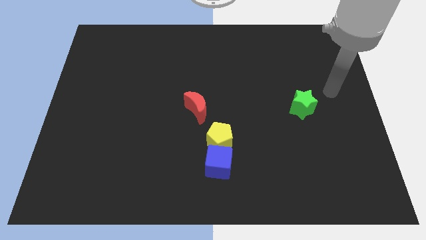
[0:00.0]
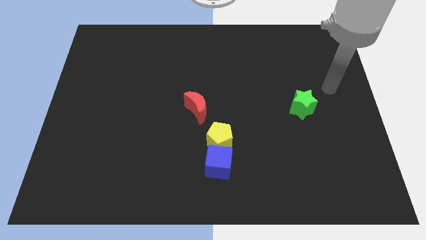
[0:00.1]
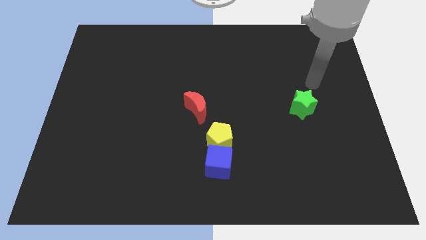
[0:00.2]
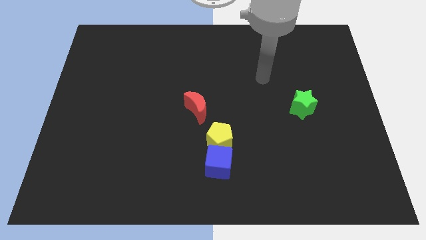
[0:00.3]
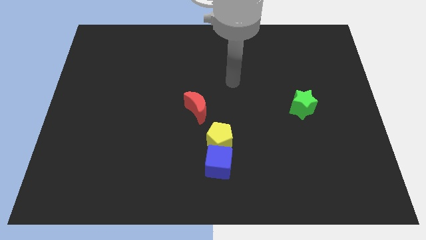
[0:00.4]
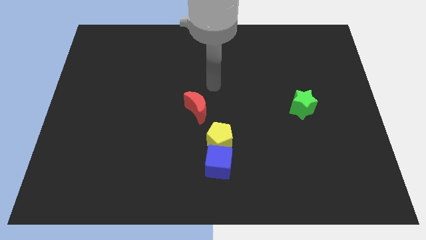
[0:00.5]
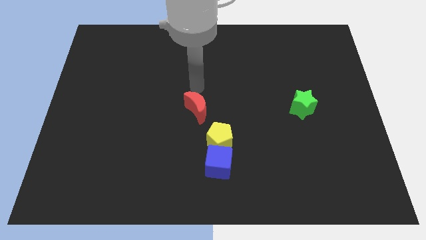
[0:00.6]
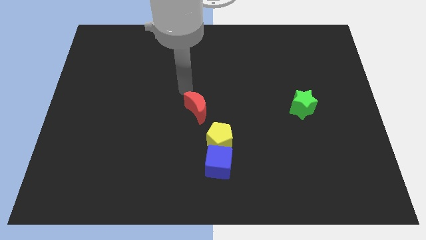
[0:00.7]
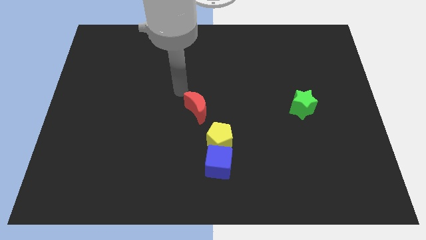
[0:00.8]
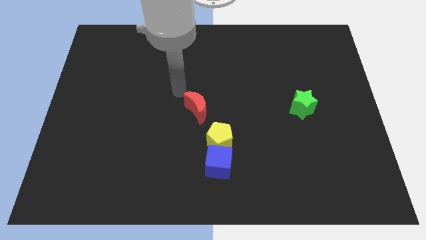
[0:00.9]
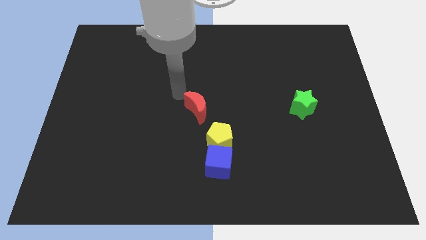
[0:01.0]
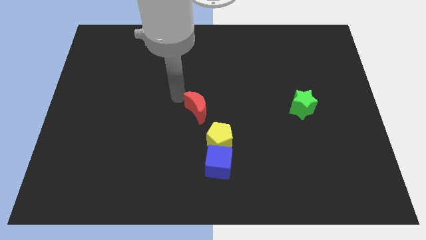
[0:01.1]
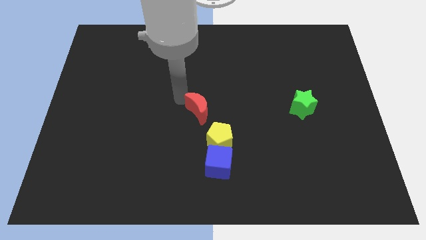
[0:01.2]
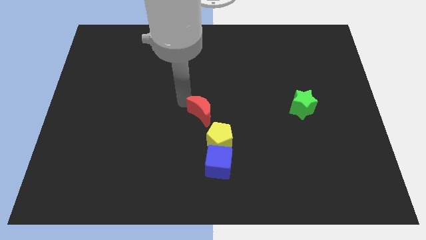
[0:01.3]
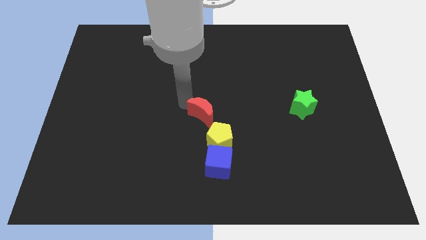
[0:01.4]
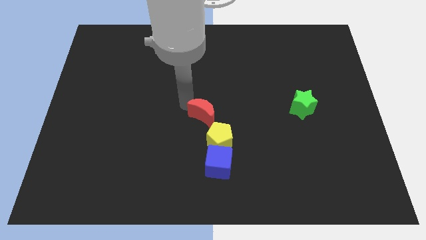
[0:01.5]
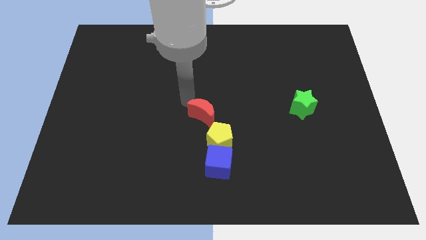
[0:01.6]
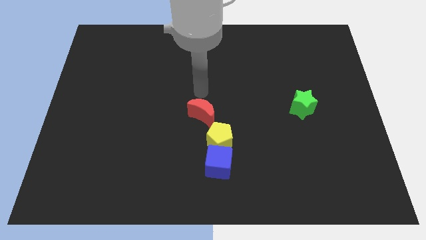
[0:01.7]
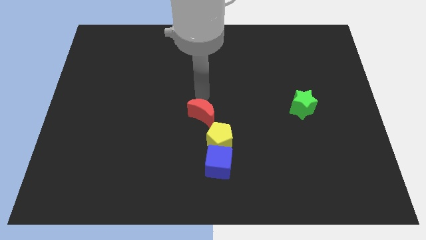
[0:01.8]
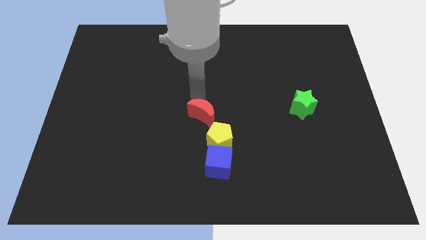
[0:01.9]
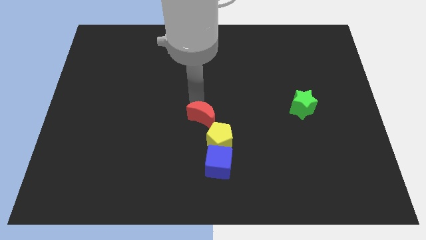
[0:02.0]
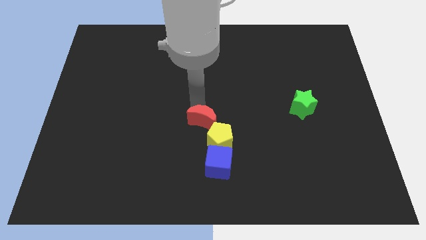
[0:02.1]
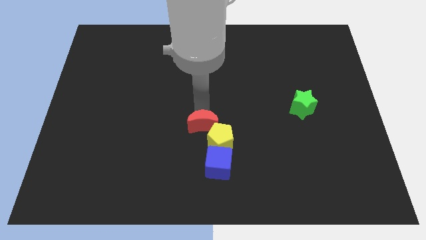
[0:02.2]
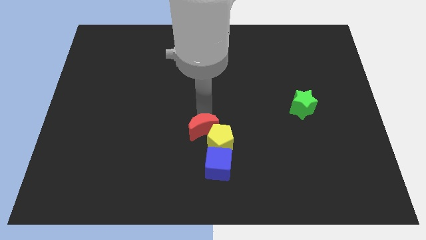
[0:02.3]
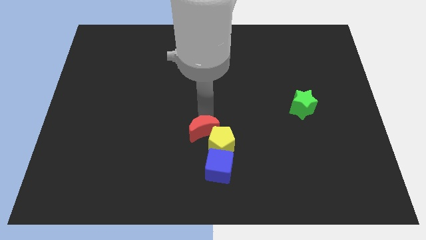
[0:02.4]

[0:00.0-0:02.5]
put the red block close to the pentagon

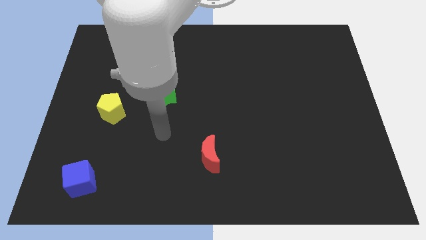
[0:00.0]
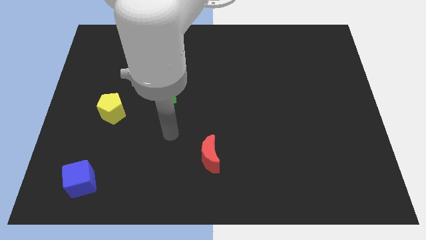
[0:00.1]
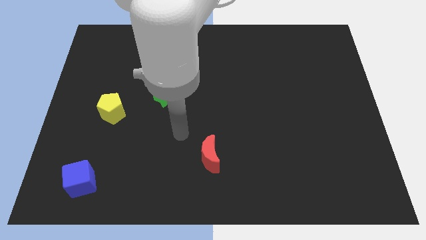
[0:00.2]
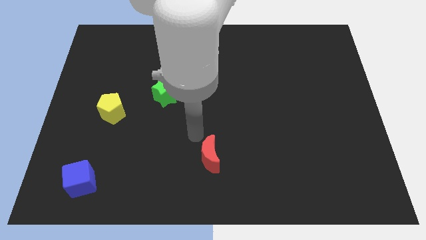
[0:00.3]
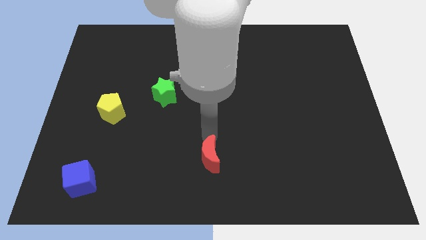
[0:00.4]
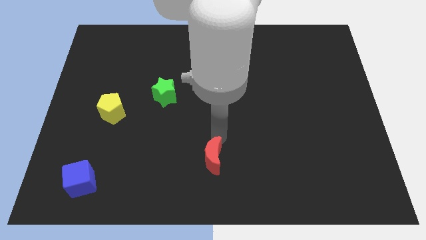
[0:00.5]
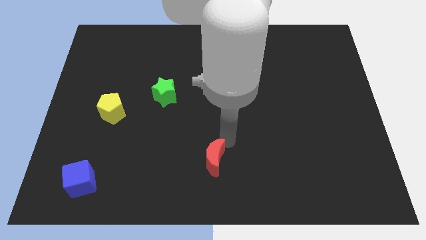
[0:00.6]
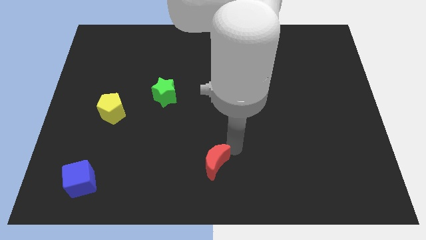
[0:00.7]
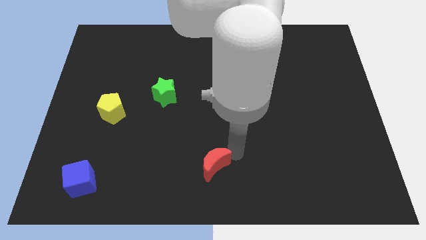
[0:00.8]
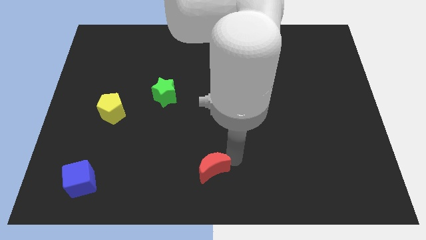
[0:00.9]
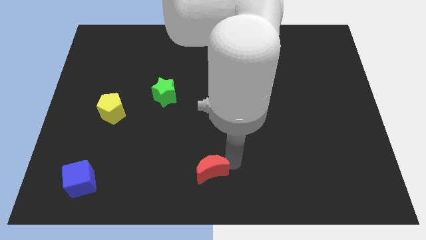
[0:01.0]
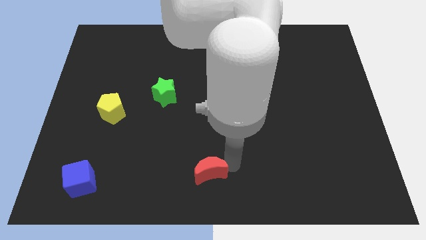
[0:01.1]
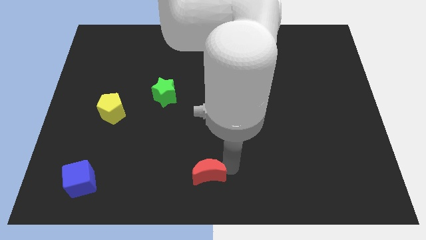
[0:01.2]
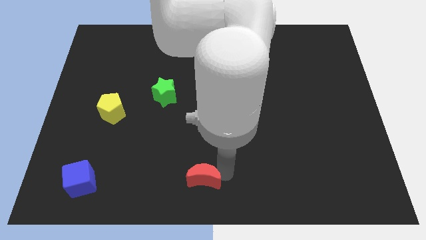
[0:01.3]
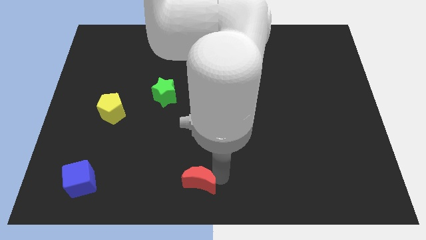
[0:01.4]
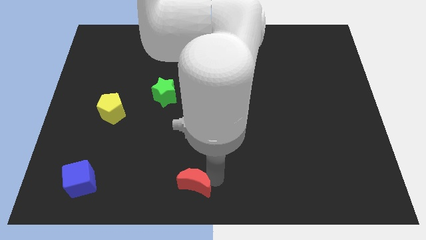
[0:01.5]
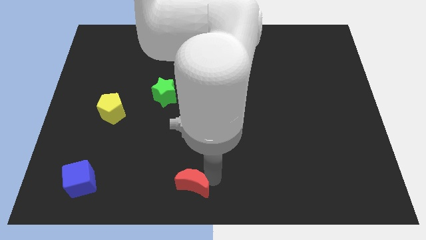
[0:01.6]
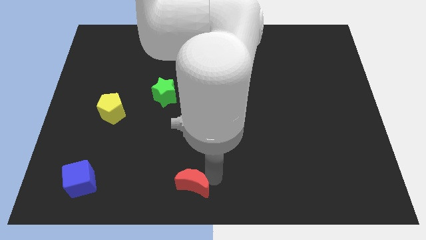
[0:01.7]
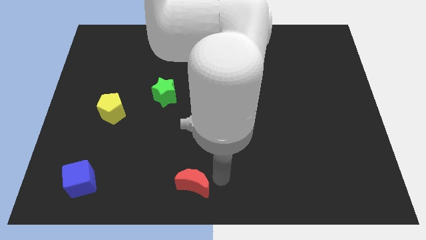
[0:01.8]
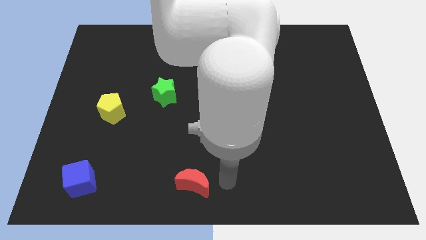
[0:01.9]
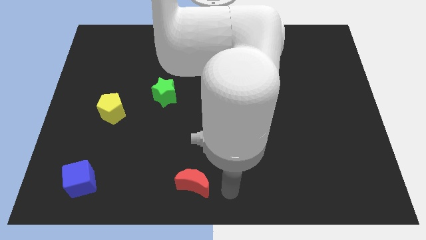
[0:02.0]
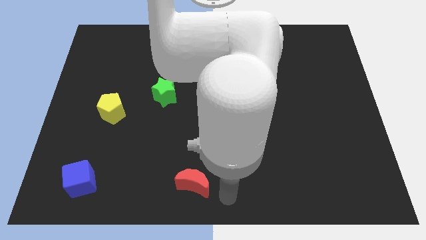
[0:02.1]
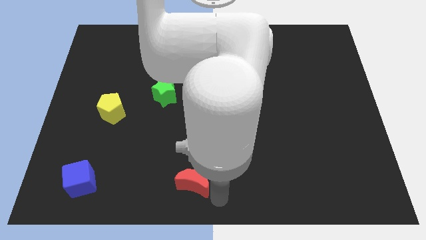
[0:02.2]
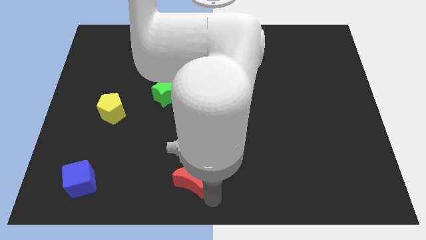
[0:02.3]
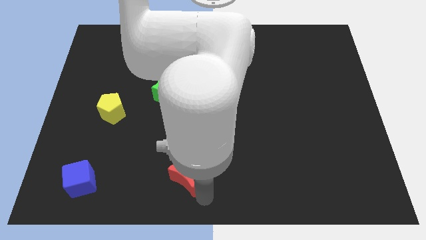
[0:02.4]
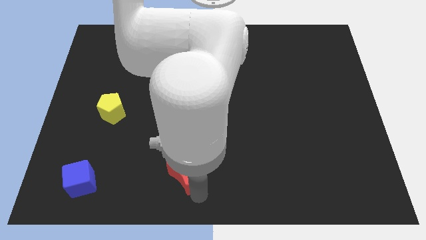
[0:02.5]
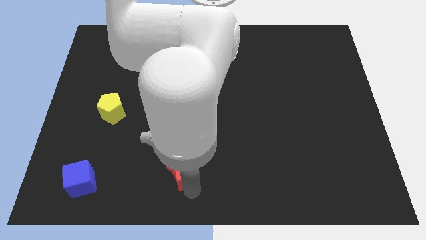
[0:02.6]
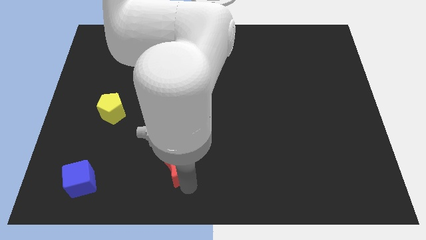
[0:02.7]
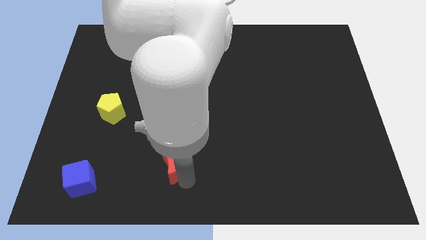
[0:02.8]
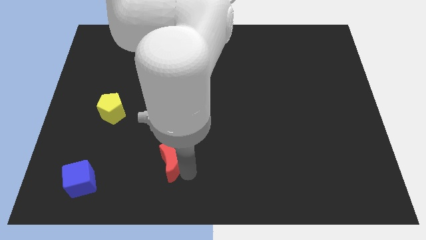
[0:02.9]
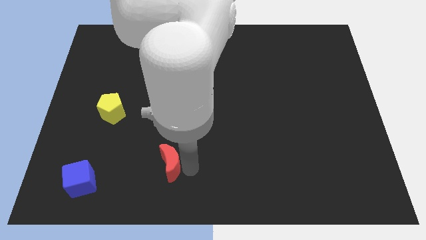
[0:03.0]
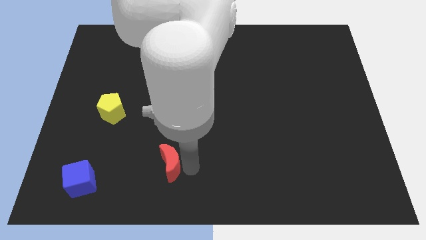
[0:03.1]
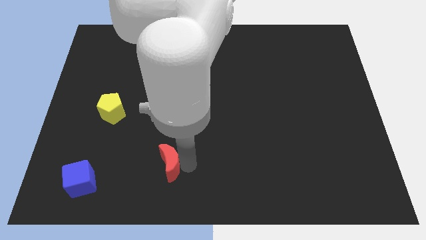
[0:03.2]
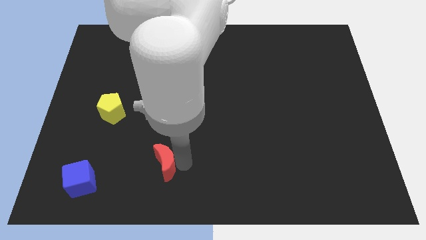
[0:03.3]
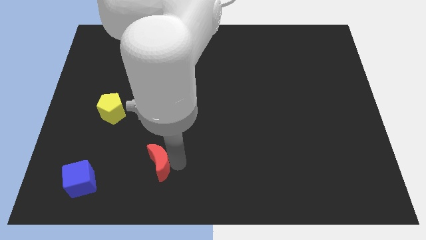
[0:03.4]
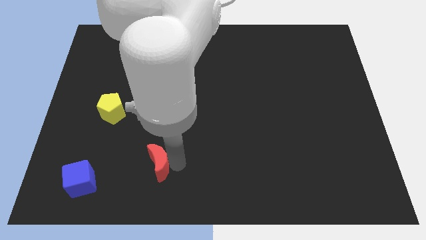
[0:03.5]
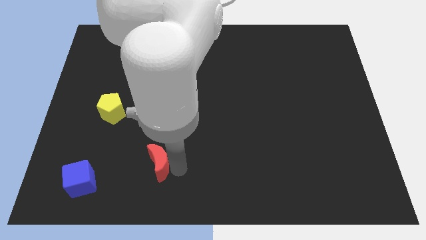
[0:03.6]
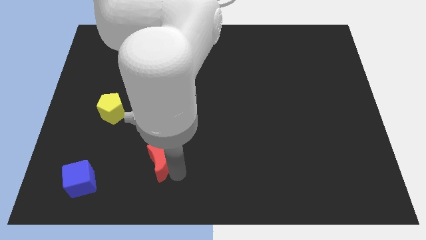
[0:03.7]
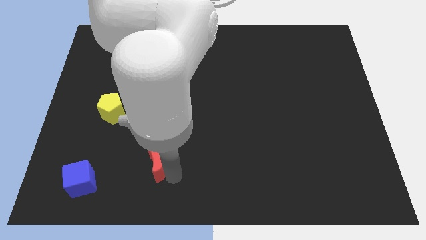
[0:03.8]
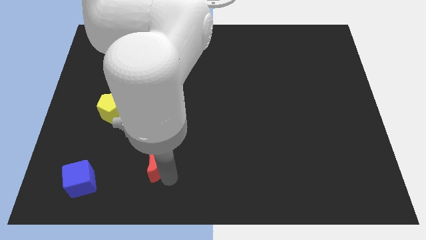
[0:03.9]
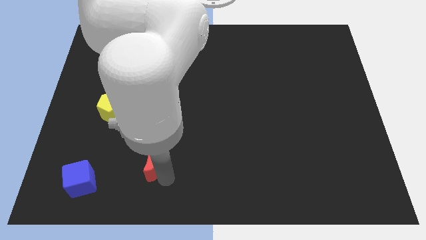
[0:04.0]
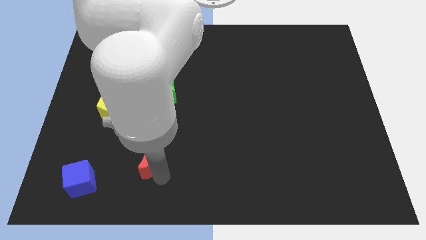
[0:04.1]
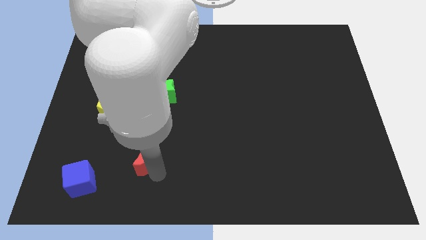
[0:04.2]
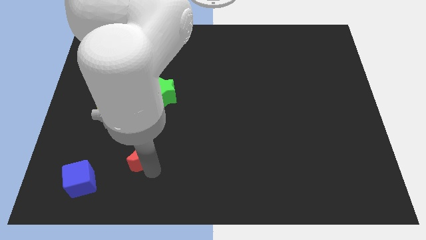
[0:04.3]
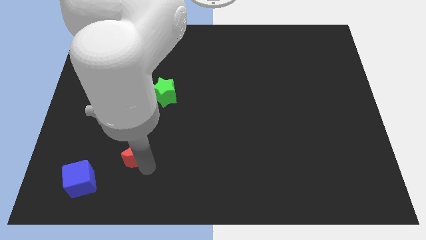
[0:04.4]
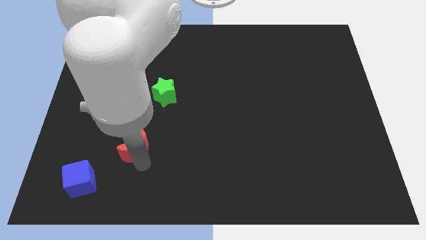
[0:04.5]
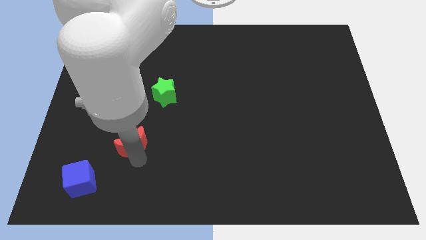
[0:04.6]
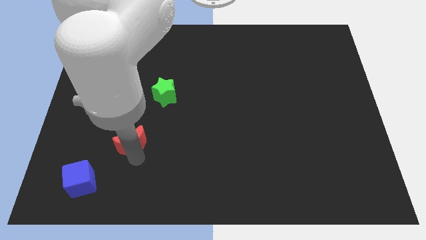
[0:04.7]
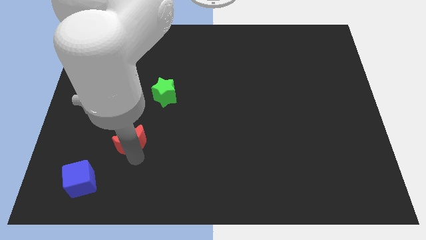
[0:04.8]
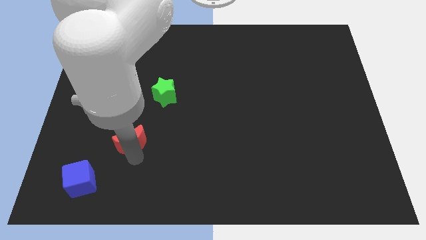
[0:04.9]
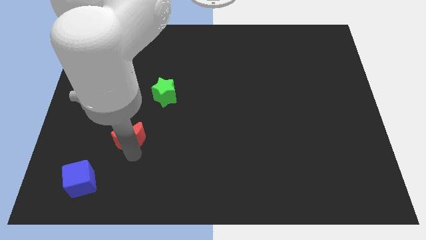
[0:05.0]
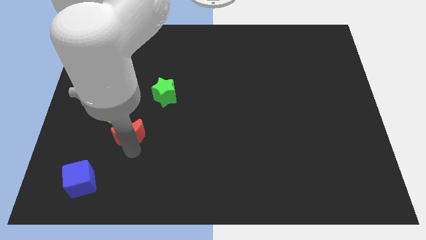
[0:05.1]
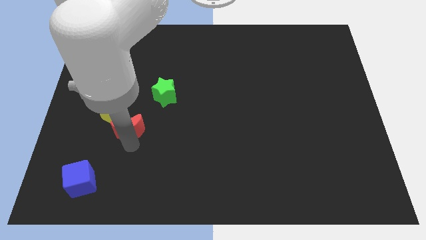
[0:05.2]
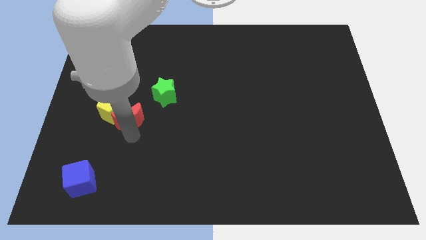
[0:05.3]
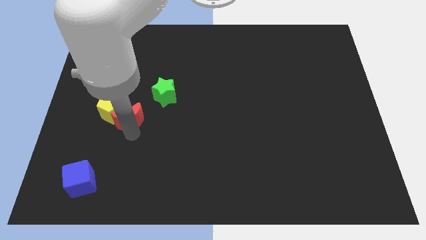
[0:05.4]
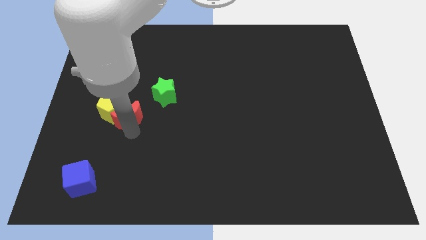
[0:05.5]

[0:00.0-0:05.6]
put the red moon towards the yellow block

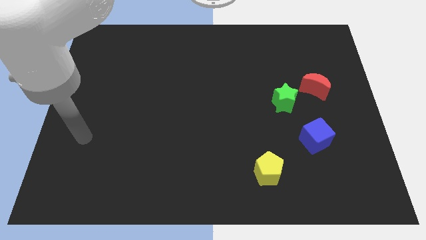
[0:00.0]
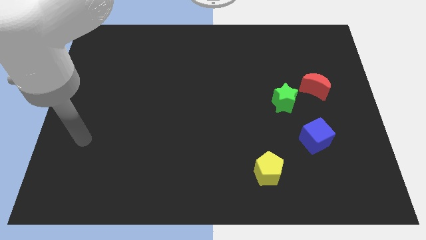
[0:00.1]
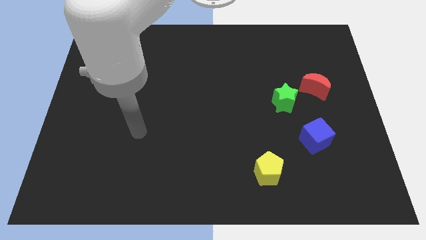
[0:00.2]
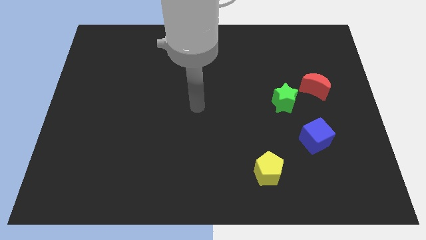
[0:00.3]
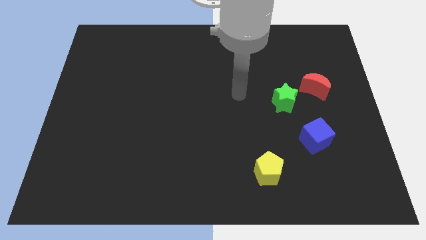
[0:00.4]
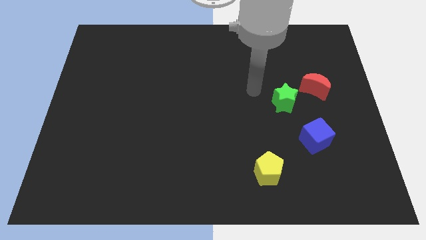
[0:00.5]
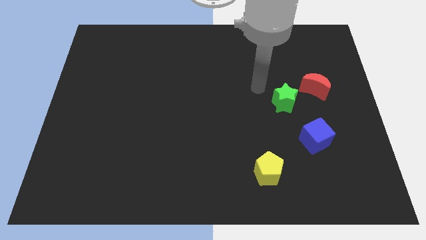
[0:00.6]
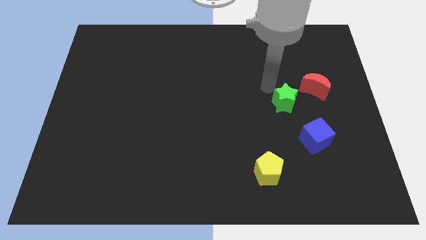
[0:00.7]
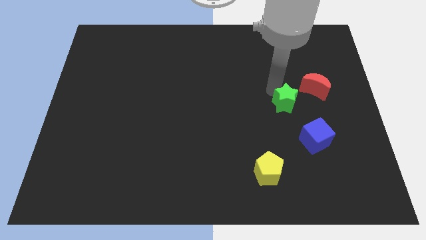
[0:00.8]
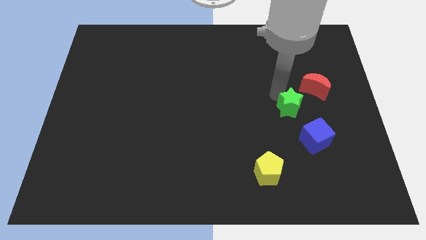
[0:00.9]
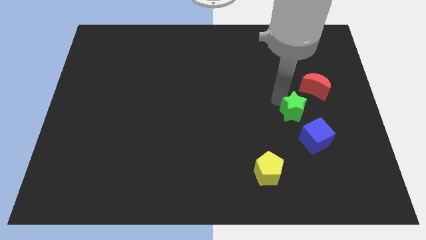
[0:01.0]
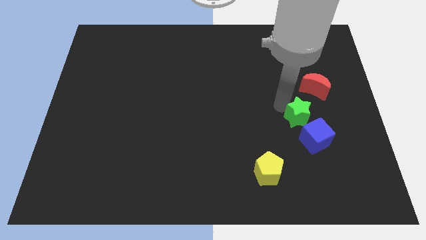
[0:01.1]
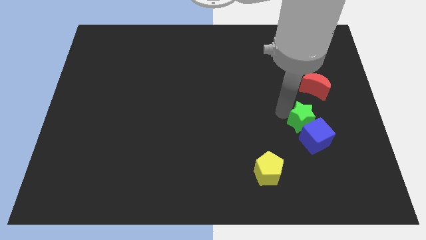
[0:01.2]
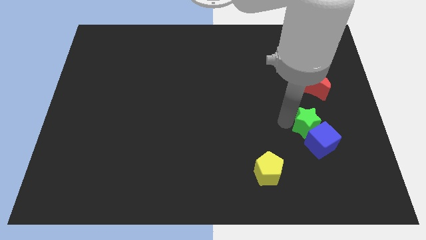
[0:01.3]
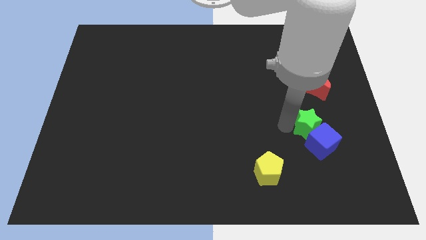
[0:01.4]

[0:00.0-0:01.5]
move the green block close to the blue block
